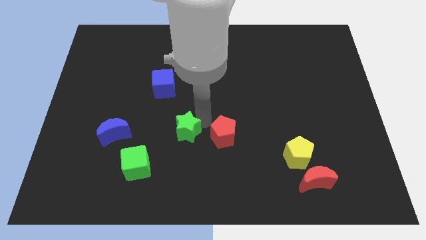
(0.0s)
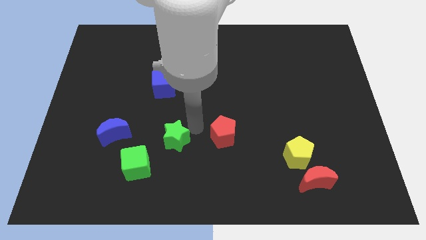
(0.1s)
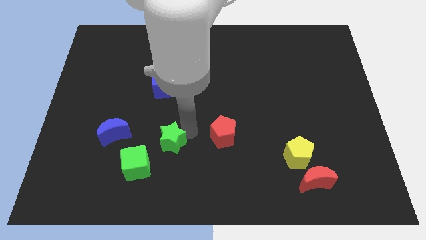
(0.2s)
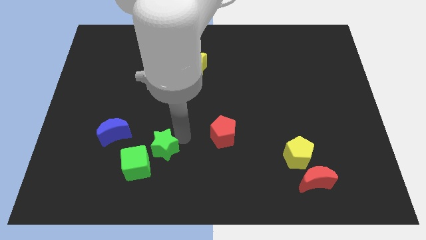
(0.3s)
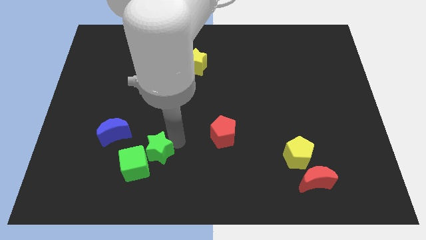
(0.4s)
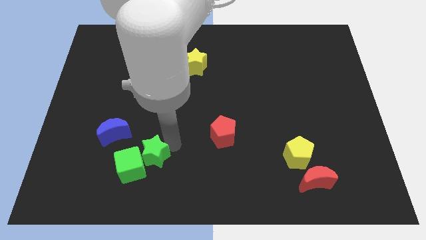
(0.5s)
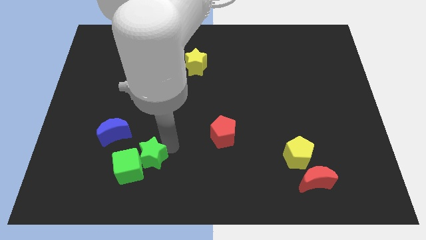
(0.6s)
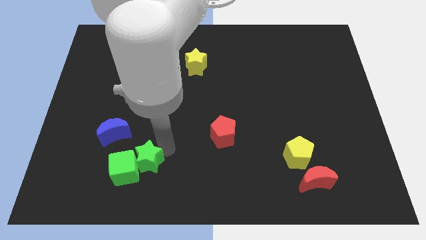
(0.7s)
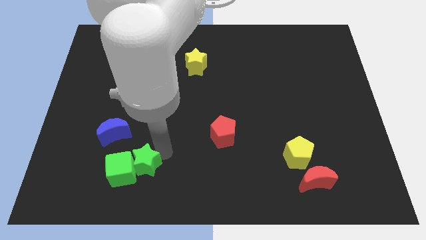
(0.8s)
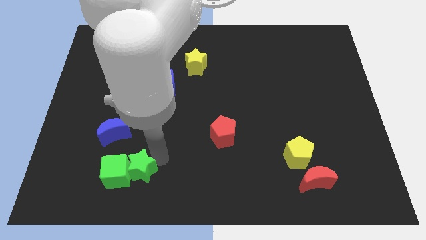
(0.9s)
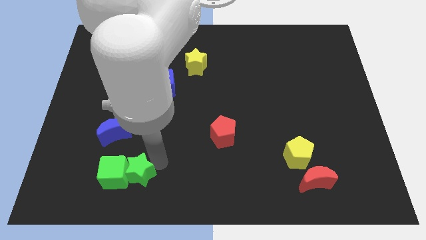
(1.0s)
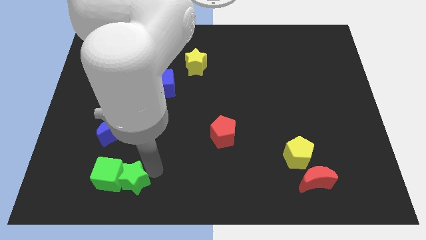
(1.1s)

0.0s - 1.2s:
move the green star to the right of the green cube

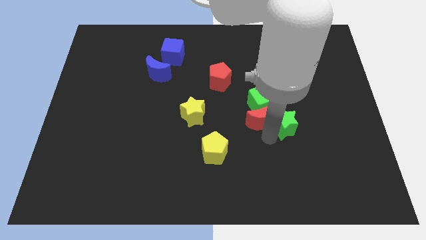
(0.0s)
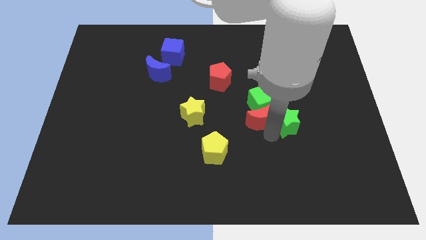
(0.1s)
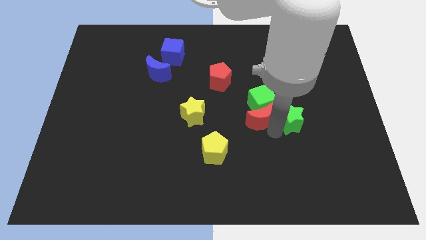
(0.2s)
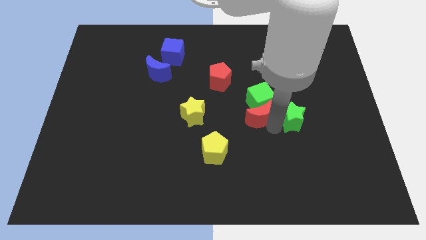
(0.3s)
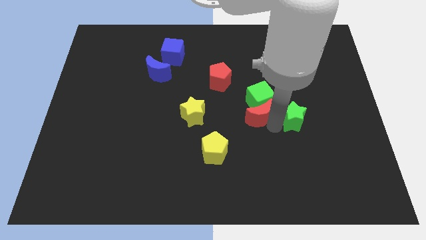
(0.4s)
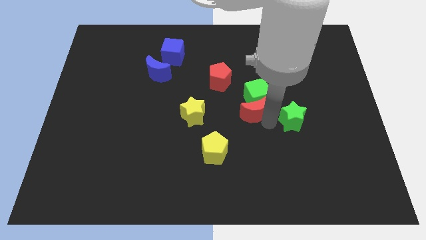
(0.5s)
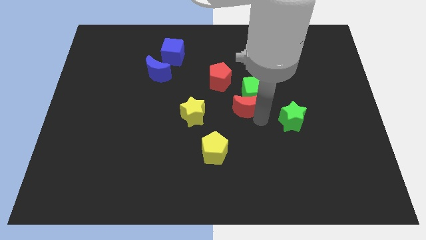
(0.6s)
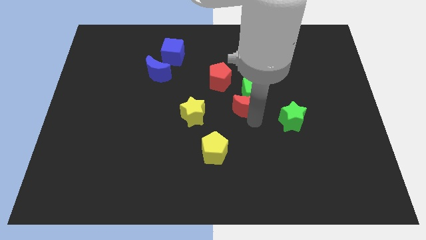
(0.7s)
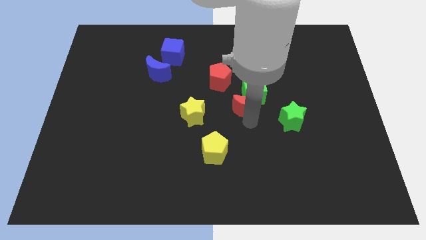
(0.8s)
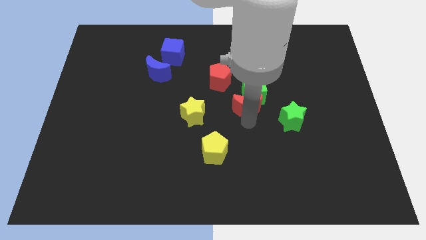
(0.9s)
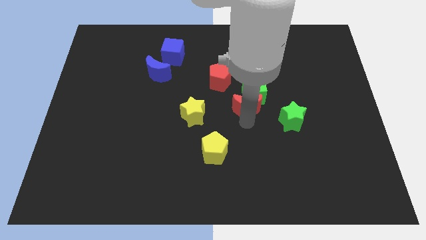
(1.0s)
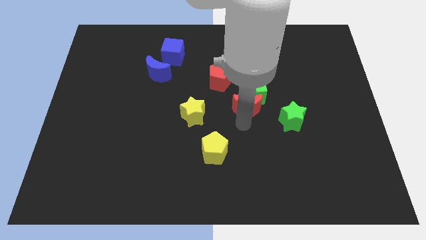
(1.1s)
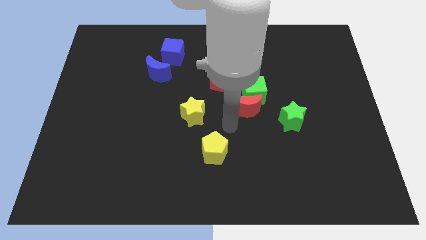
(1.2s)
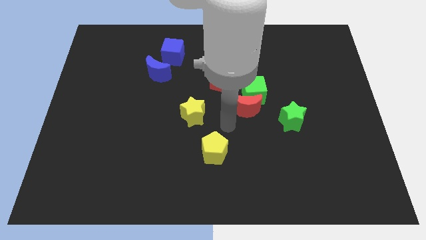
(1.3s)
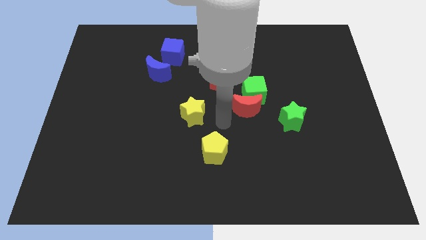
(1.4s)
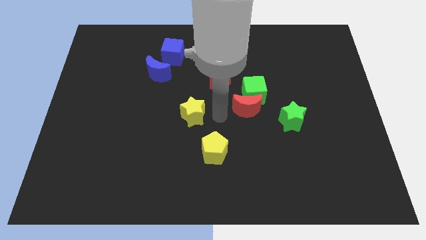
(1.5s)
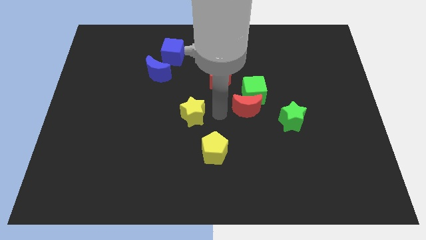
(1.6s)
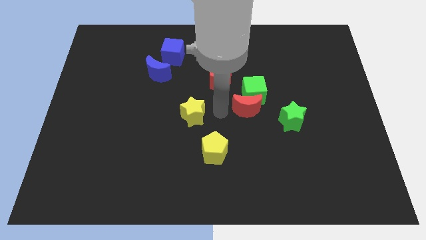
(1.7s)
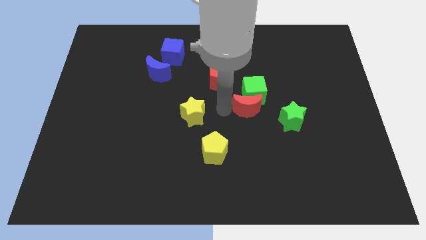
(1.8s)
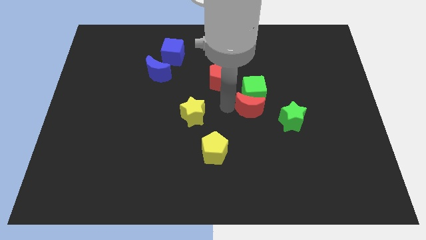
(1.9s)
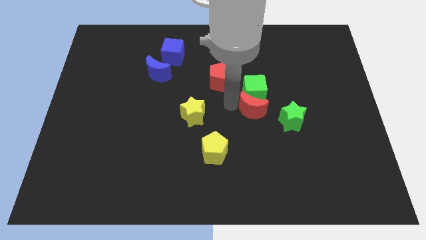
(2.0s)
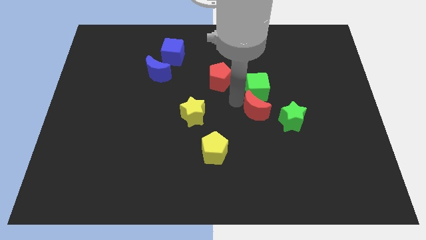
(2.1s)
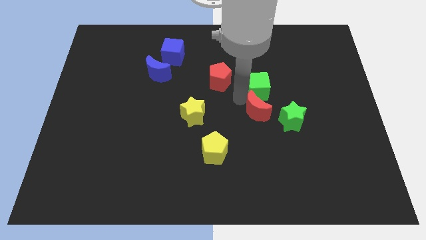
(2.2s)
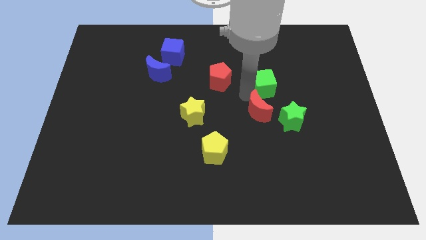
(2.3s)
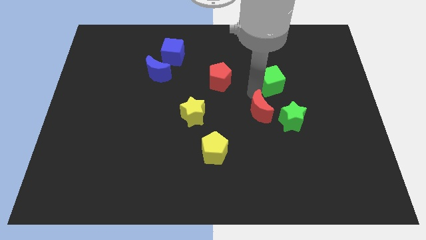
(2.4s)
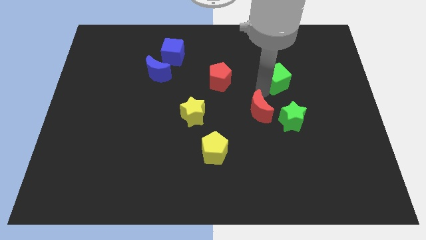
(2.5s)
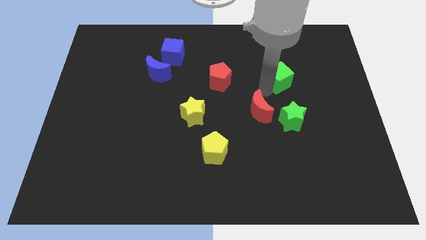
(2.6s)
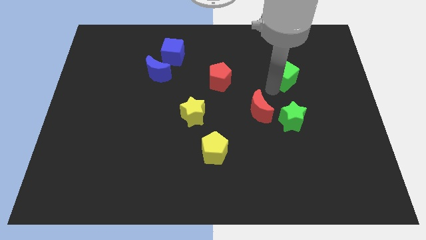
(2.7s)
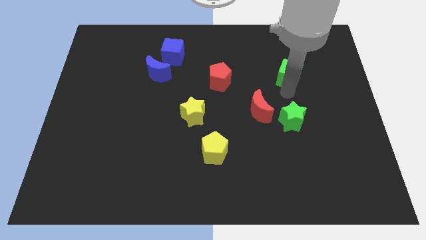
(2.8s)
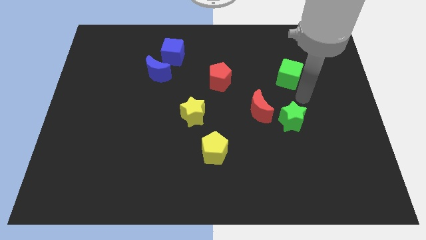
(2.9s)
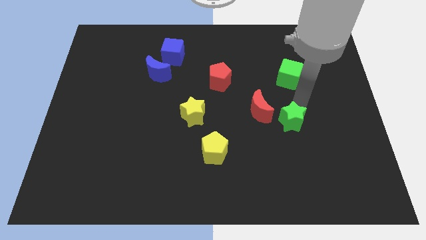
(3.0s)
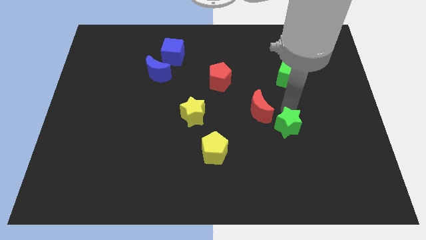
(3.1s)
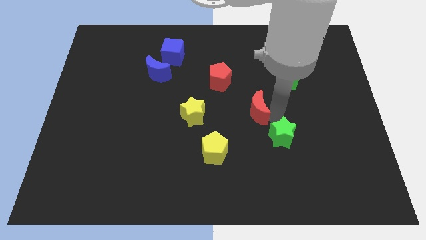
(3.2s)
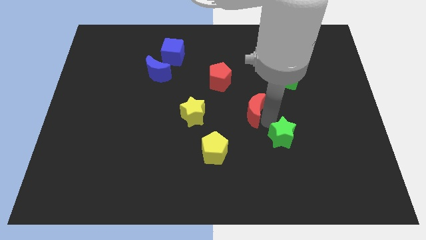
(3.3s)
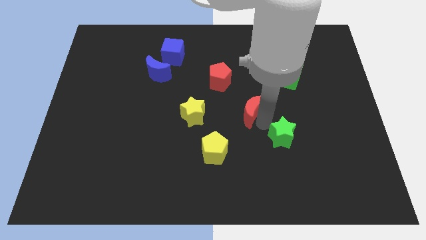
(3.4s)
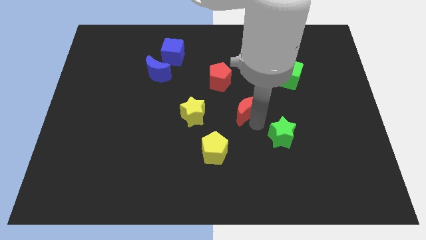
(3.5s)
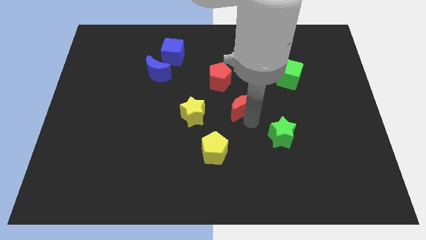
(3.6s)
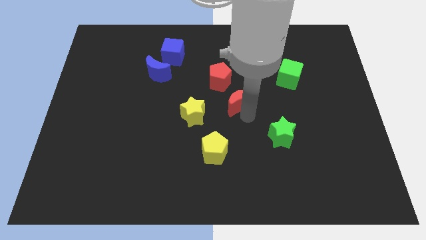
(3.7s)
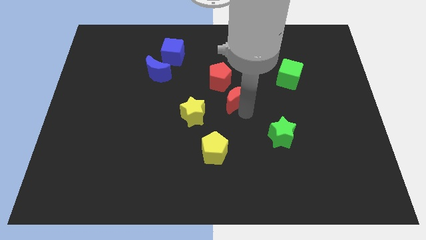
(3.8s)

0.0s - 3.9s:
separate the red crescent from the green cube

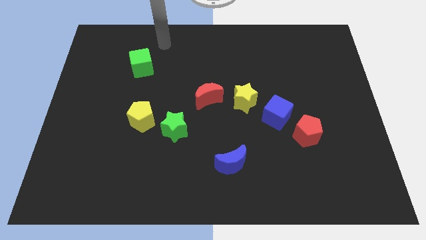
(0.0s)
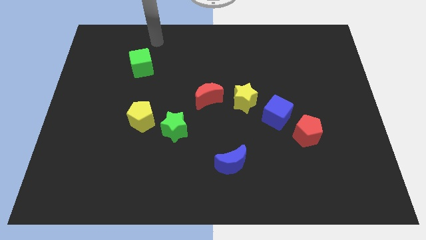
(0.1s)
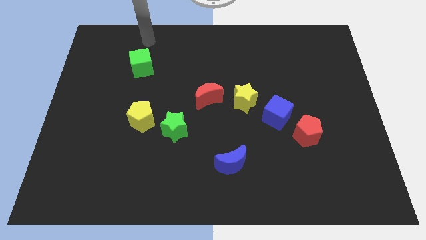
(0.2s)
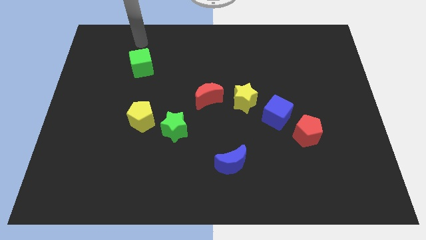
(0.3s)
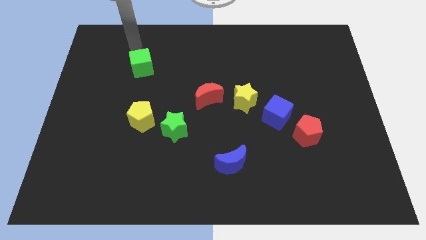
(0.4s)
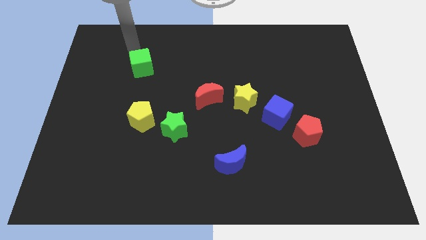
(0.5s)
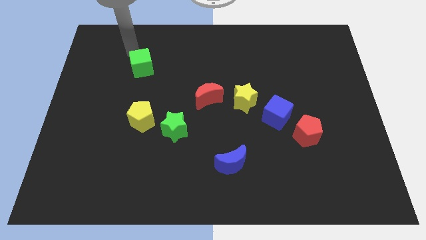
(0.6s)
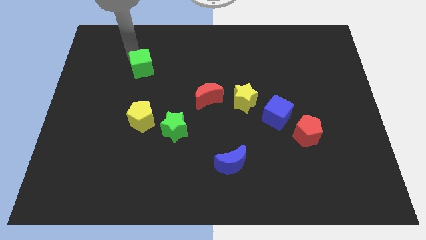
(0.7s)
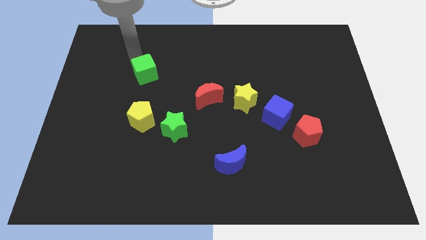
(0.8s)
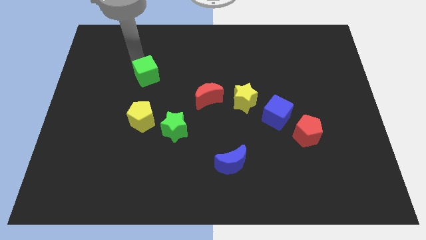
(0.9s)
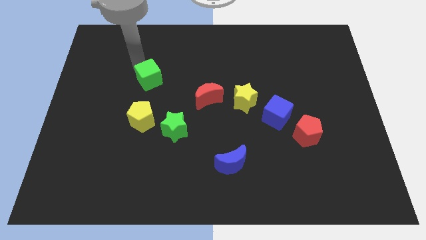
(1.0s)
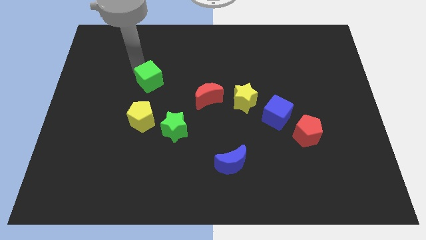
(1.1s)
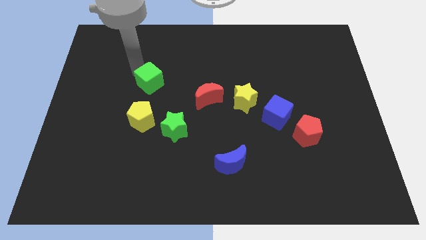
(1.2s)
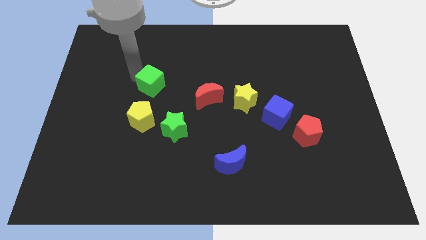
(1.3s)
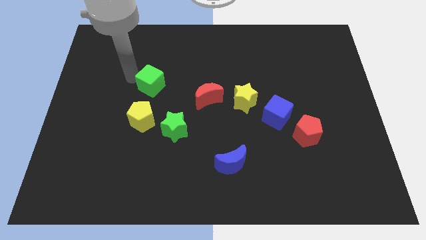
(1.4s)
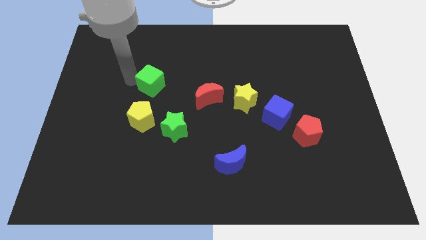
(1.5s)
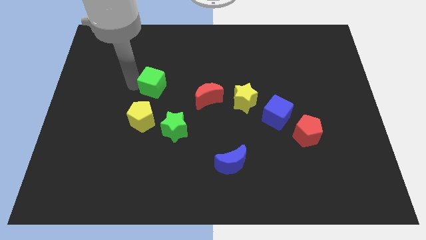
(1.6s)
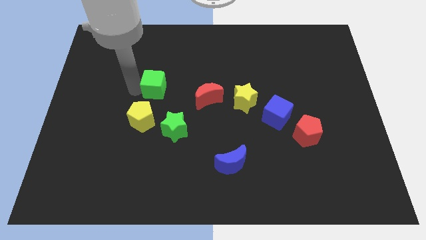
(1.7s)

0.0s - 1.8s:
move the green cube towards the yellow pentagon

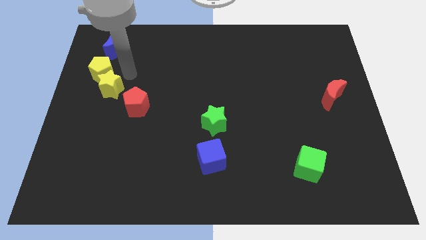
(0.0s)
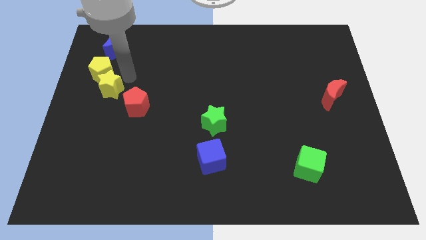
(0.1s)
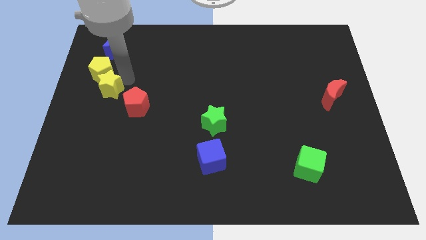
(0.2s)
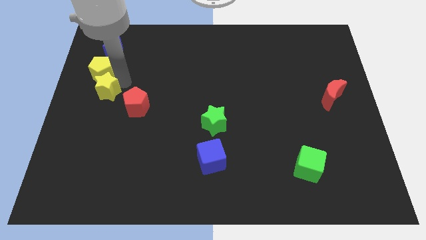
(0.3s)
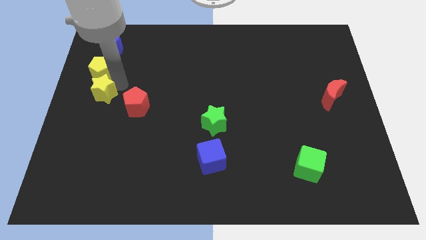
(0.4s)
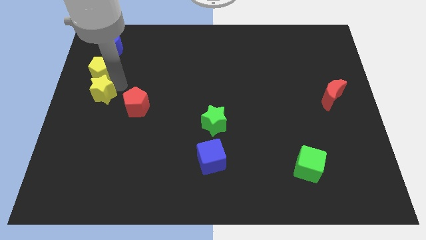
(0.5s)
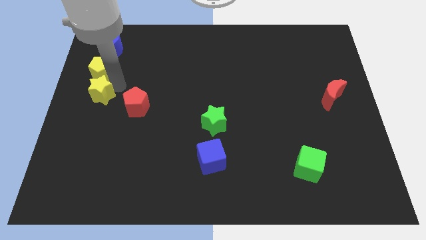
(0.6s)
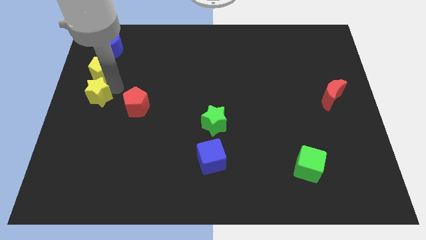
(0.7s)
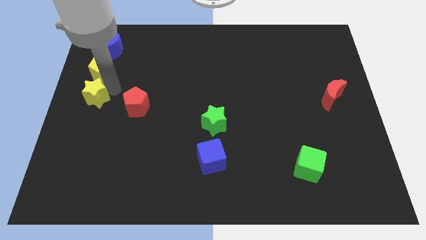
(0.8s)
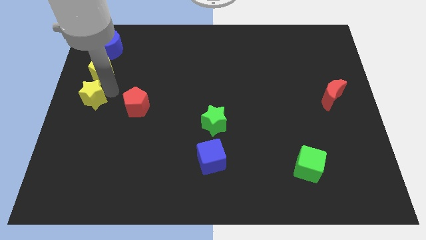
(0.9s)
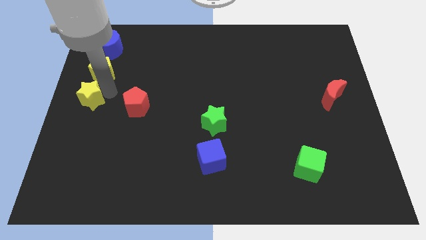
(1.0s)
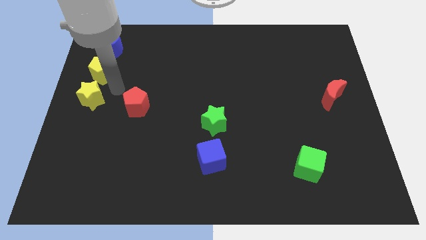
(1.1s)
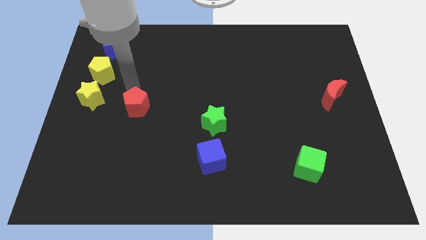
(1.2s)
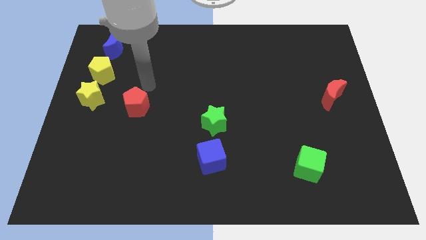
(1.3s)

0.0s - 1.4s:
push the yellow star towards the left side of the board

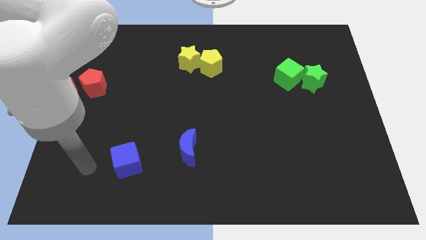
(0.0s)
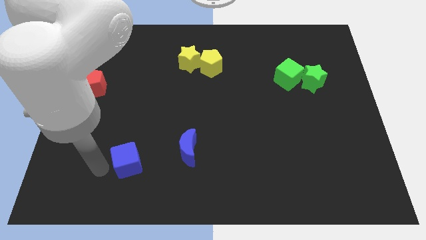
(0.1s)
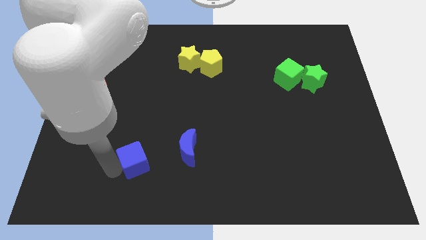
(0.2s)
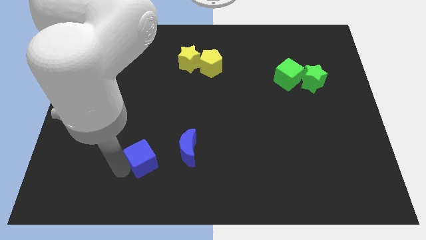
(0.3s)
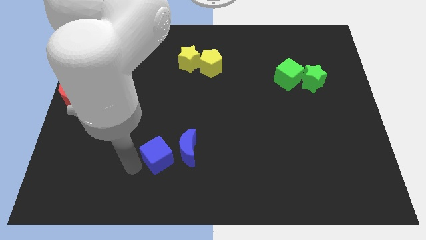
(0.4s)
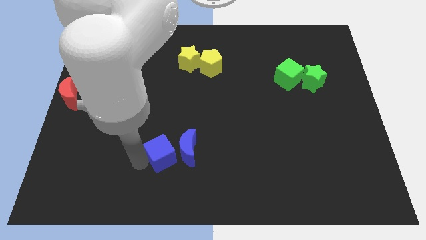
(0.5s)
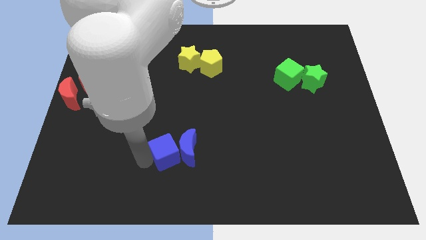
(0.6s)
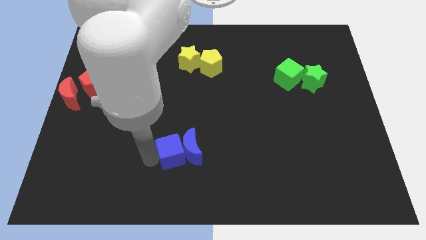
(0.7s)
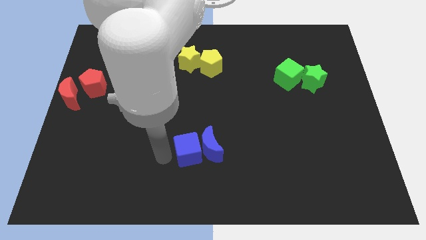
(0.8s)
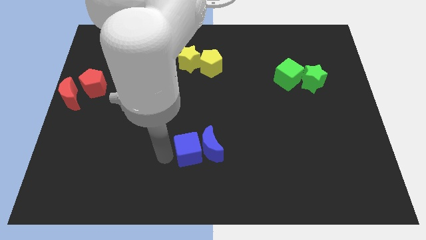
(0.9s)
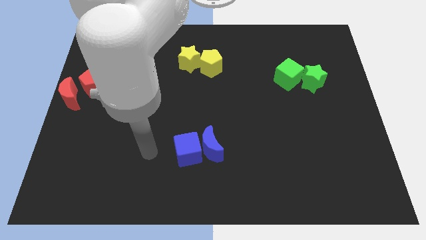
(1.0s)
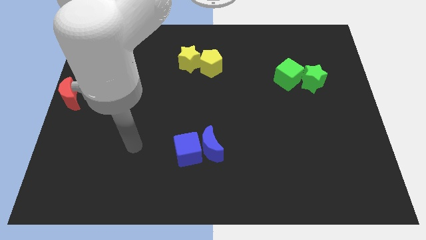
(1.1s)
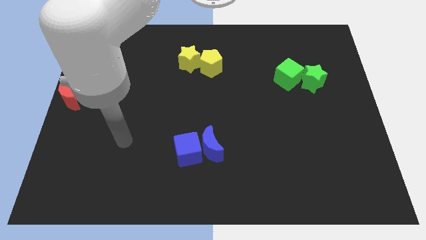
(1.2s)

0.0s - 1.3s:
push the blue cube into the blue crescent
